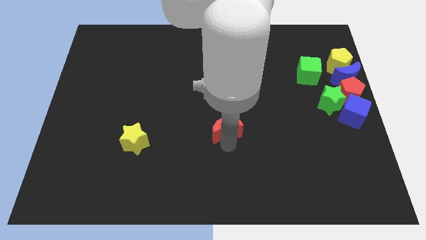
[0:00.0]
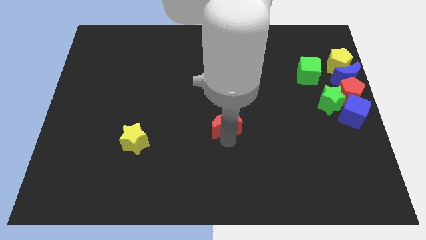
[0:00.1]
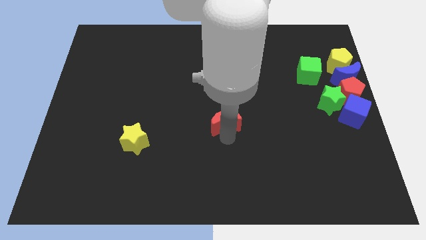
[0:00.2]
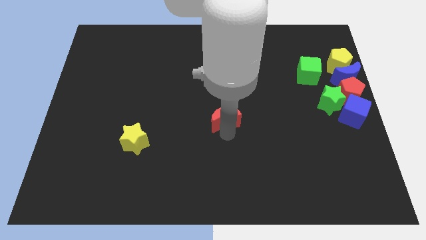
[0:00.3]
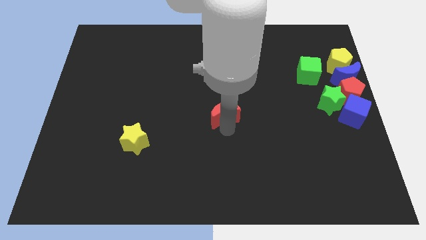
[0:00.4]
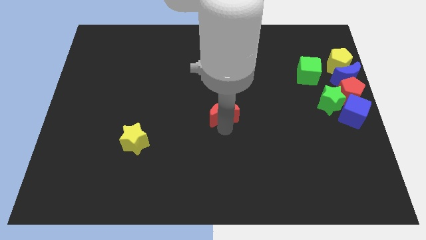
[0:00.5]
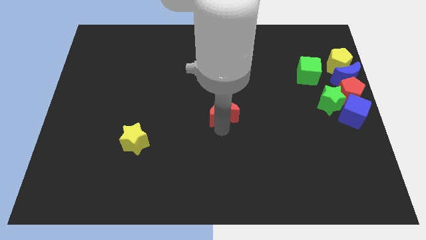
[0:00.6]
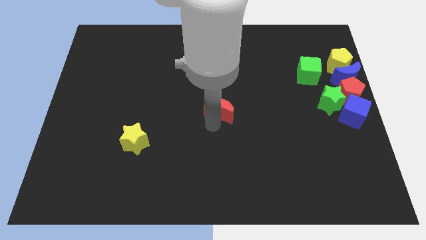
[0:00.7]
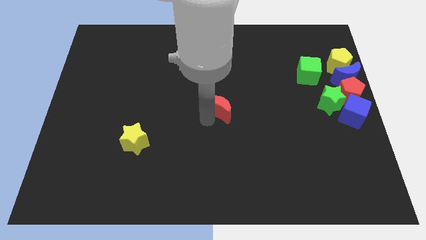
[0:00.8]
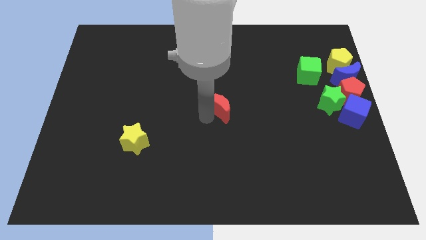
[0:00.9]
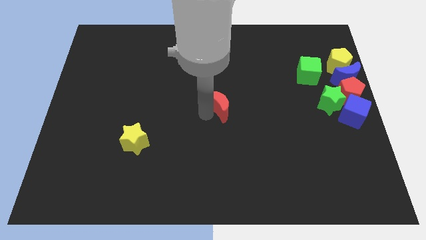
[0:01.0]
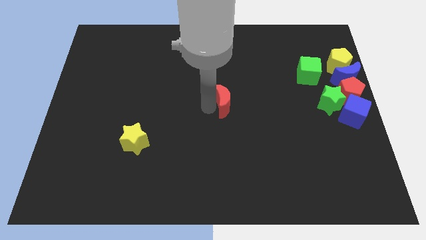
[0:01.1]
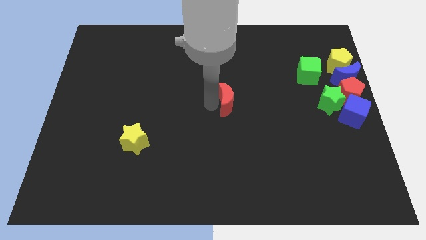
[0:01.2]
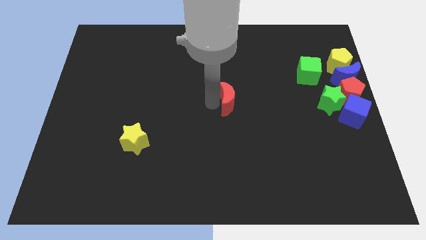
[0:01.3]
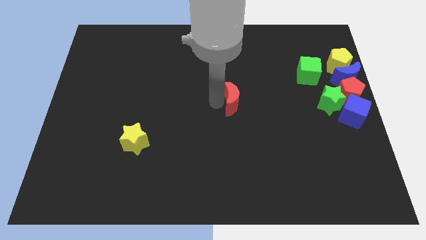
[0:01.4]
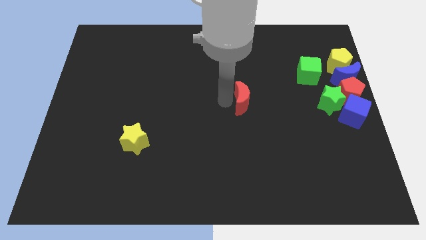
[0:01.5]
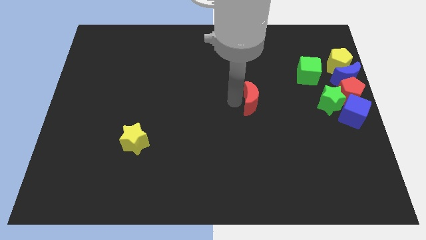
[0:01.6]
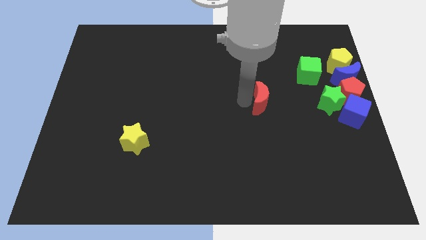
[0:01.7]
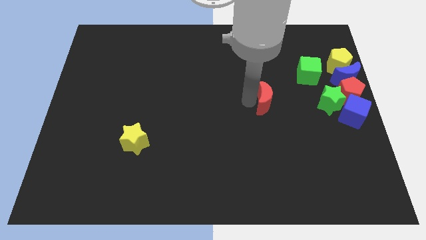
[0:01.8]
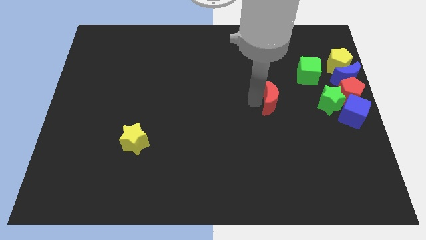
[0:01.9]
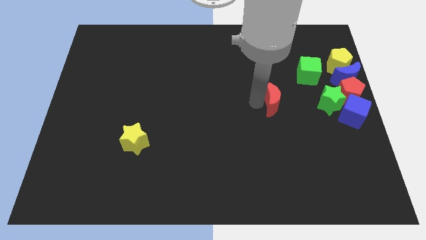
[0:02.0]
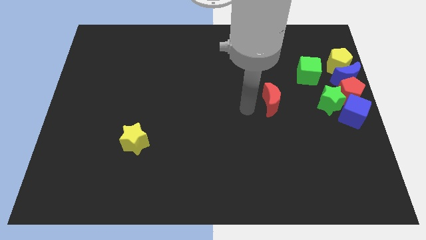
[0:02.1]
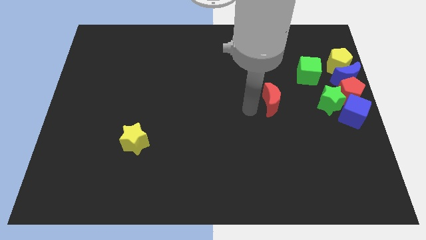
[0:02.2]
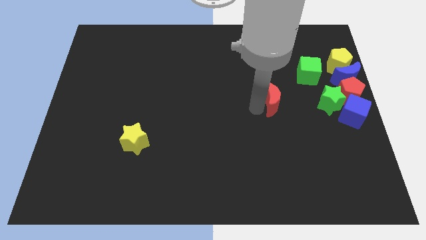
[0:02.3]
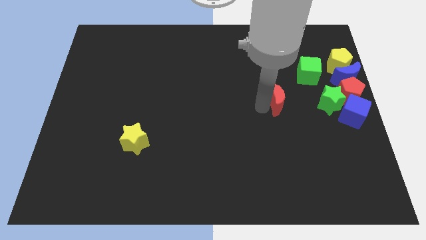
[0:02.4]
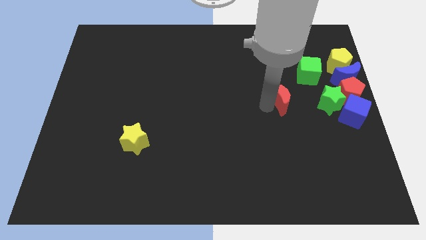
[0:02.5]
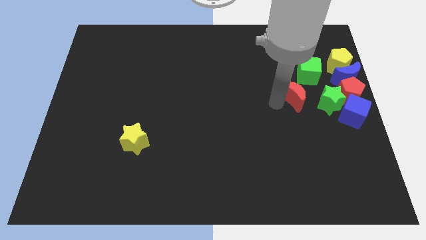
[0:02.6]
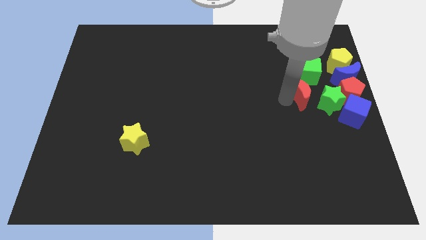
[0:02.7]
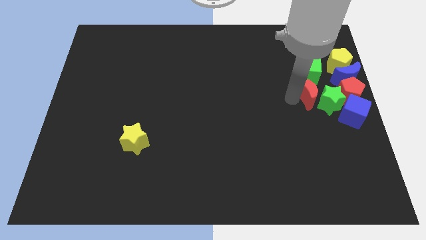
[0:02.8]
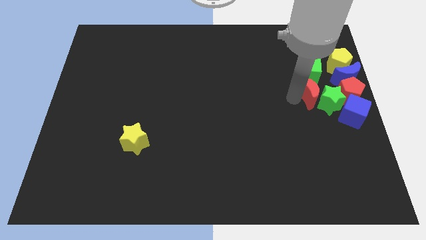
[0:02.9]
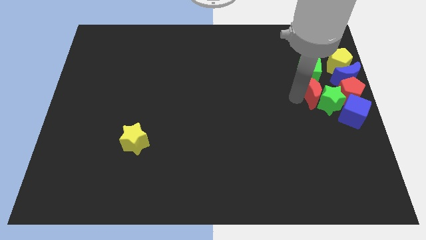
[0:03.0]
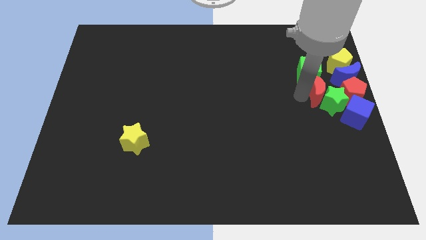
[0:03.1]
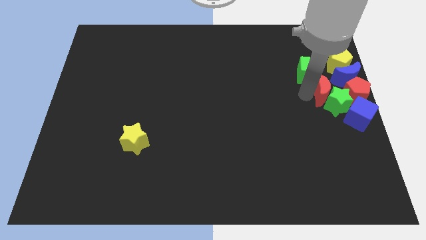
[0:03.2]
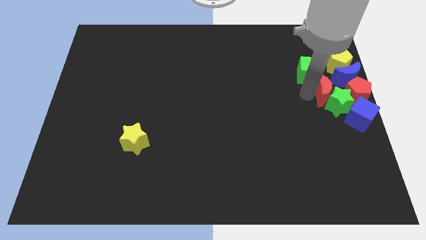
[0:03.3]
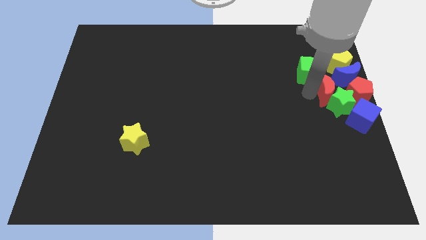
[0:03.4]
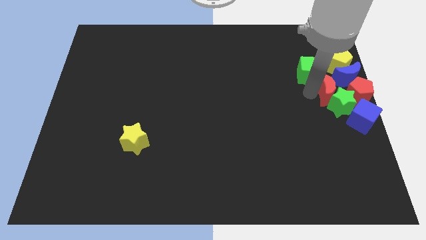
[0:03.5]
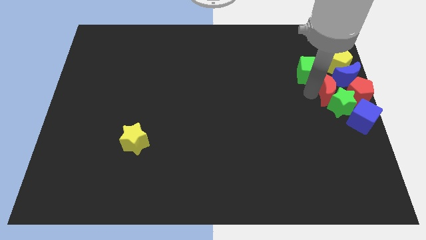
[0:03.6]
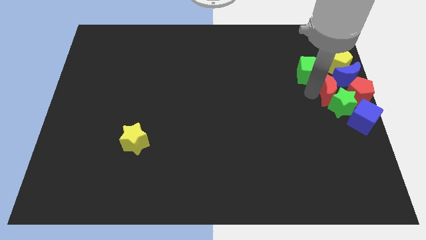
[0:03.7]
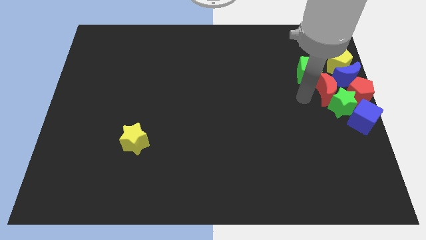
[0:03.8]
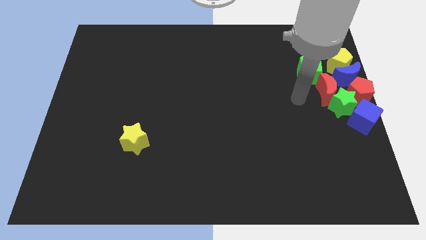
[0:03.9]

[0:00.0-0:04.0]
push the red moon into the group of blocks at the right

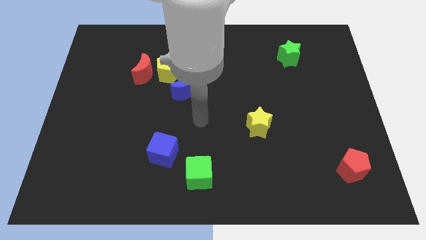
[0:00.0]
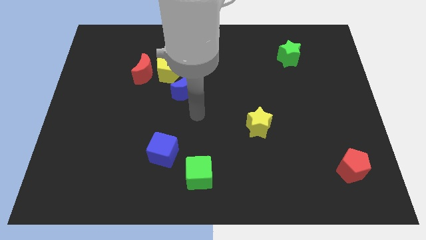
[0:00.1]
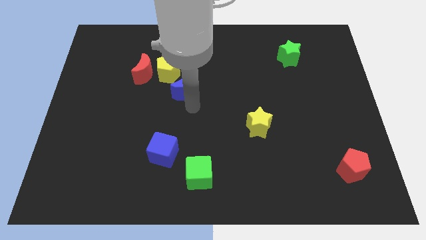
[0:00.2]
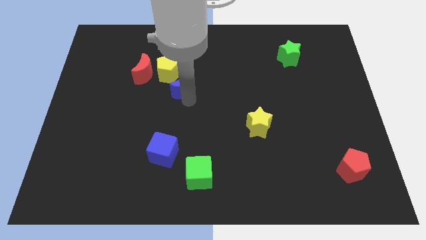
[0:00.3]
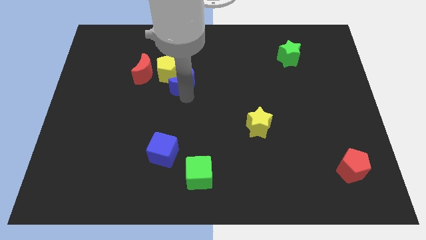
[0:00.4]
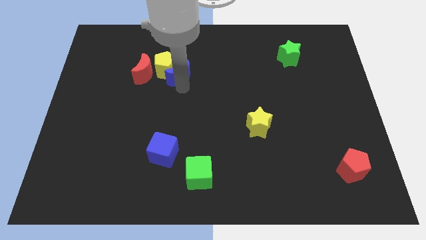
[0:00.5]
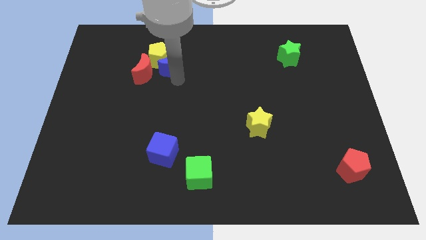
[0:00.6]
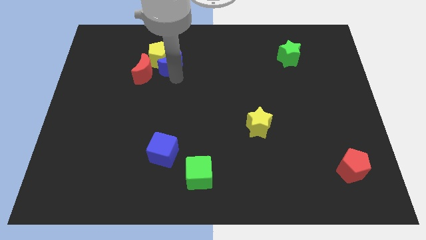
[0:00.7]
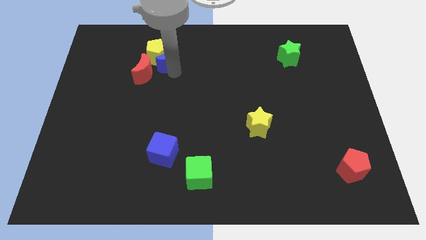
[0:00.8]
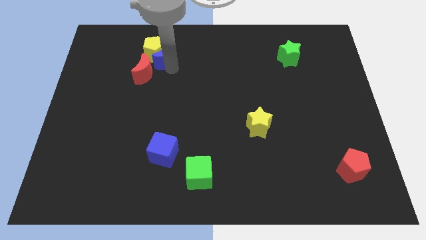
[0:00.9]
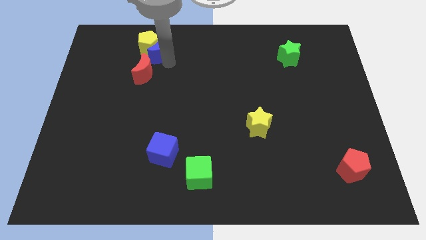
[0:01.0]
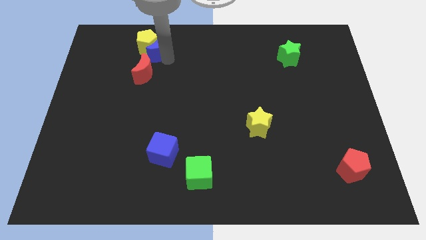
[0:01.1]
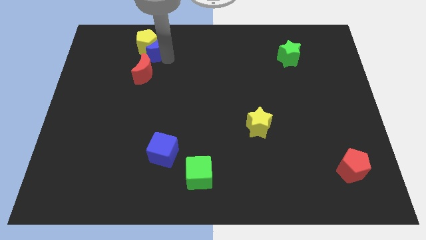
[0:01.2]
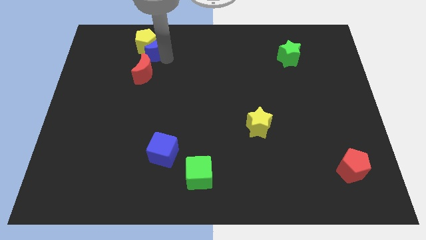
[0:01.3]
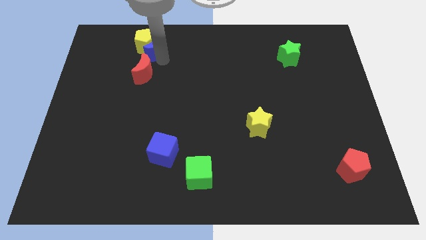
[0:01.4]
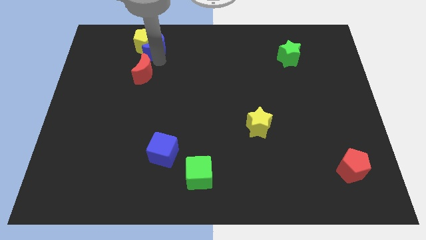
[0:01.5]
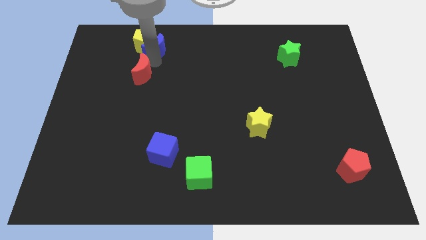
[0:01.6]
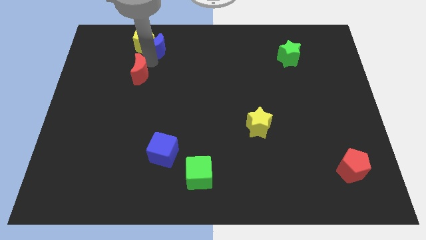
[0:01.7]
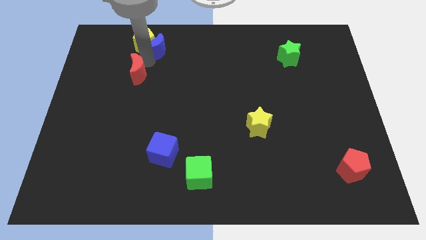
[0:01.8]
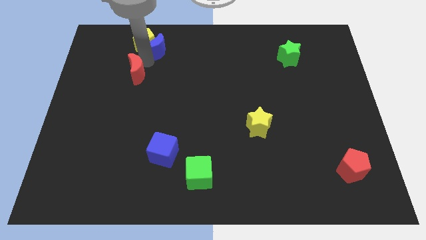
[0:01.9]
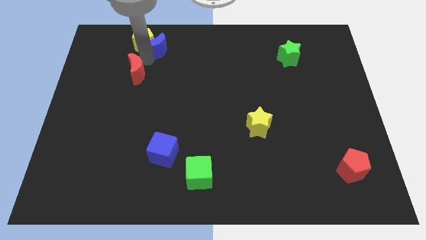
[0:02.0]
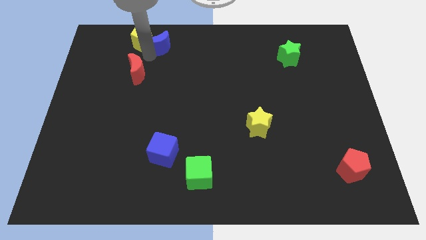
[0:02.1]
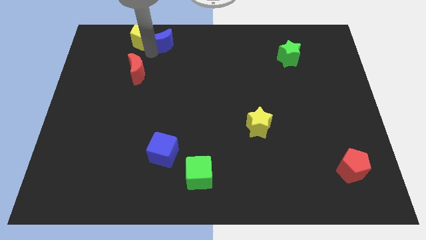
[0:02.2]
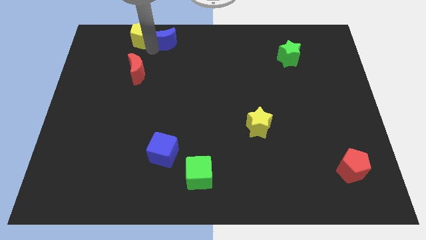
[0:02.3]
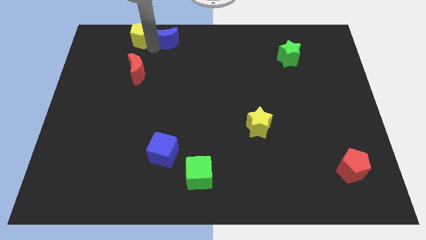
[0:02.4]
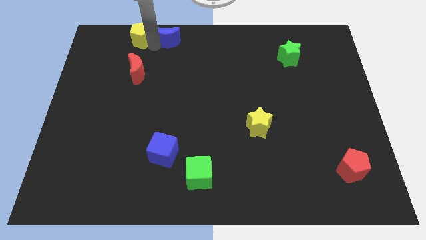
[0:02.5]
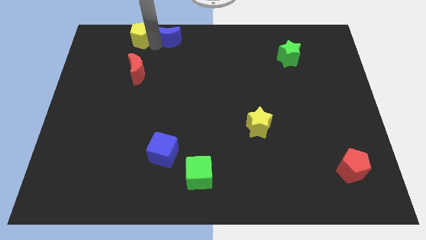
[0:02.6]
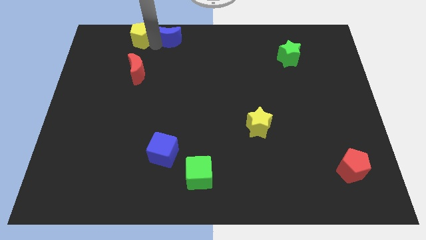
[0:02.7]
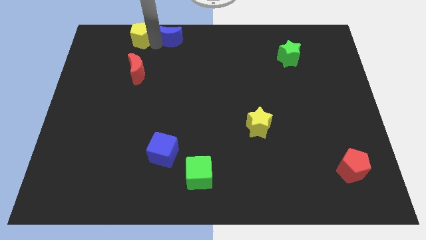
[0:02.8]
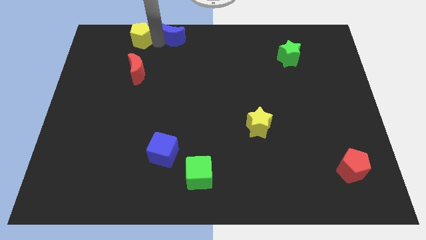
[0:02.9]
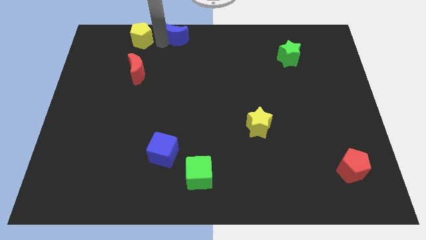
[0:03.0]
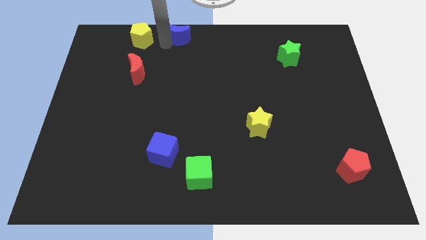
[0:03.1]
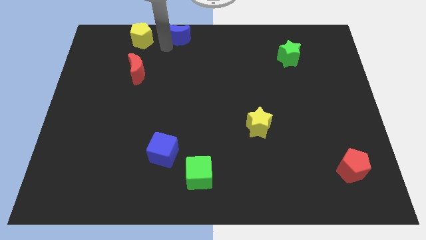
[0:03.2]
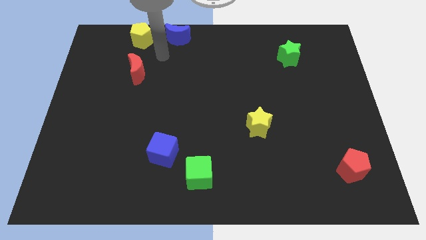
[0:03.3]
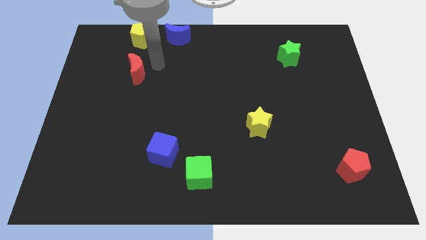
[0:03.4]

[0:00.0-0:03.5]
move the blue crescent to the right side of the yellow pentagon

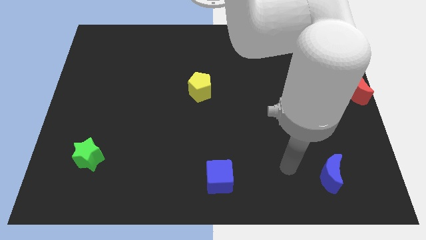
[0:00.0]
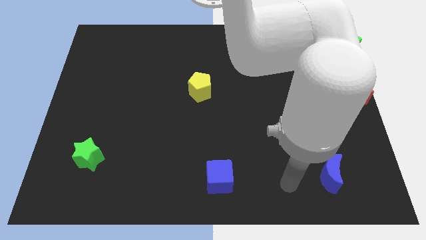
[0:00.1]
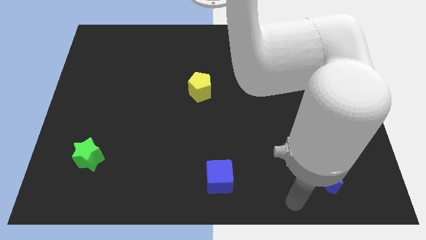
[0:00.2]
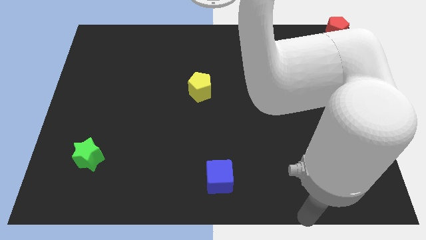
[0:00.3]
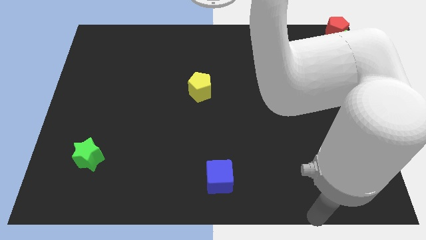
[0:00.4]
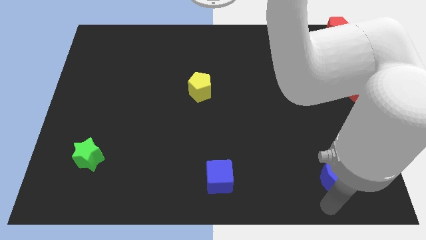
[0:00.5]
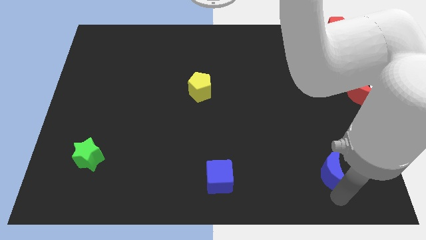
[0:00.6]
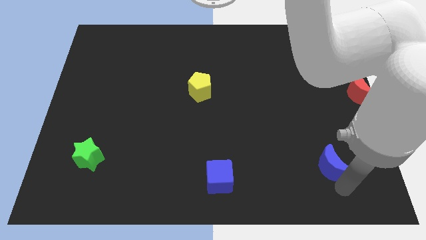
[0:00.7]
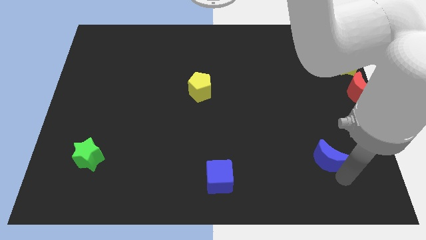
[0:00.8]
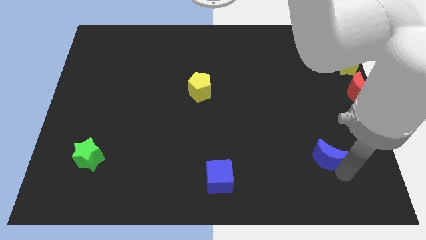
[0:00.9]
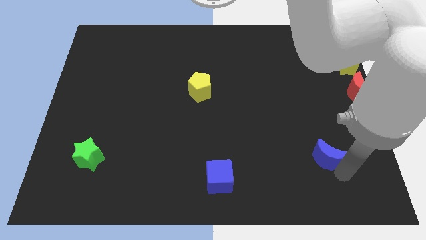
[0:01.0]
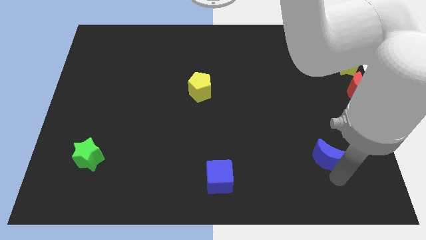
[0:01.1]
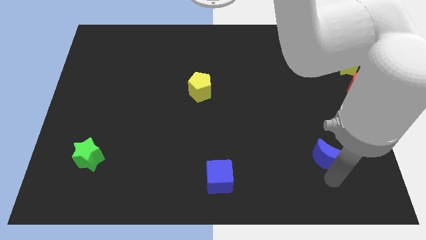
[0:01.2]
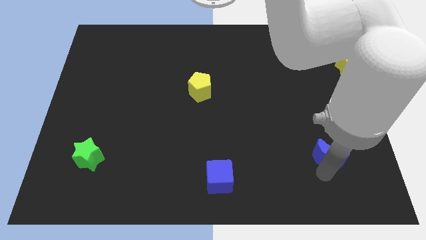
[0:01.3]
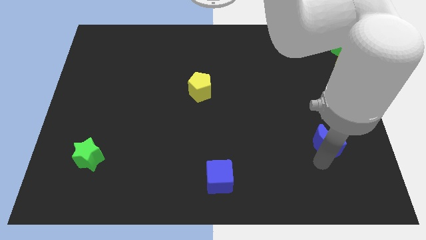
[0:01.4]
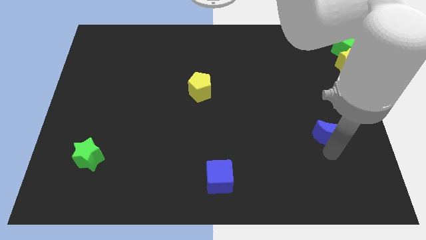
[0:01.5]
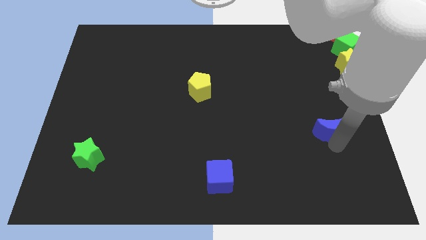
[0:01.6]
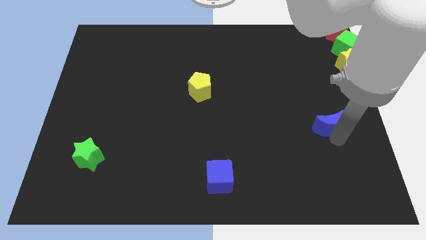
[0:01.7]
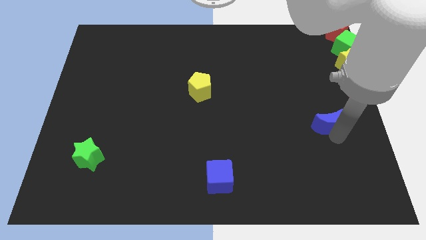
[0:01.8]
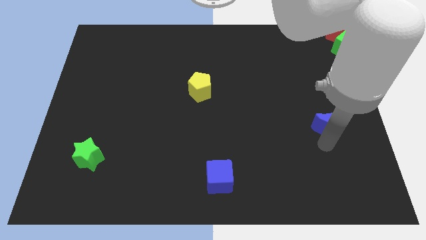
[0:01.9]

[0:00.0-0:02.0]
push the blue crescent diagonally on the bottom right side of the yellow pentagon
